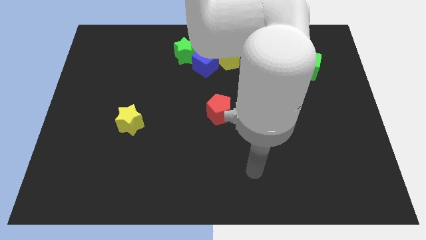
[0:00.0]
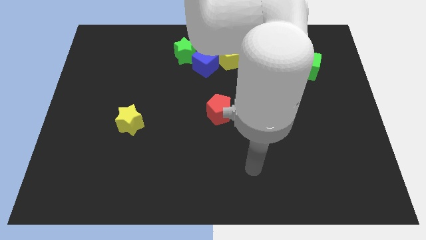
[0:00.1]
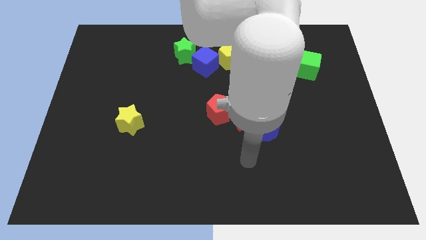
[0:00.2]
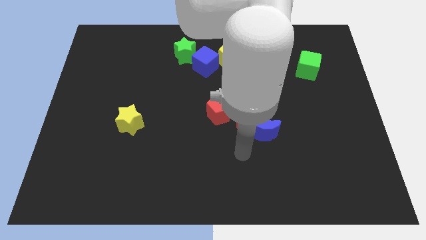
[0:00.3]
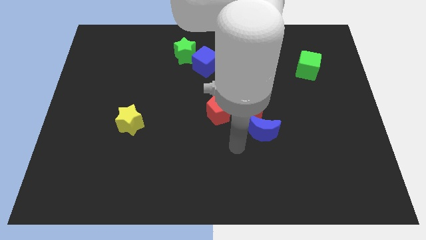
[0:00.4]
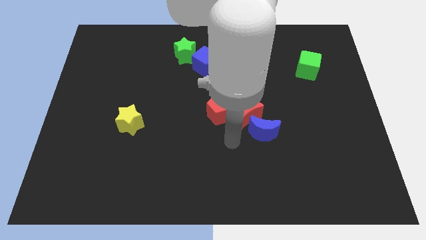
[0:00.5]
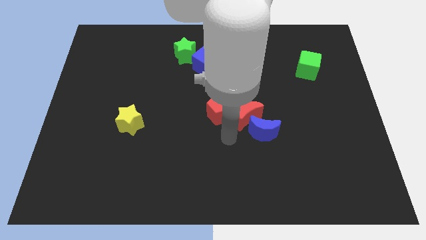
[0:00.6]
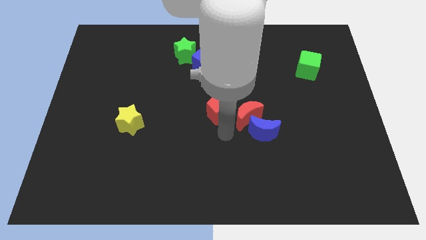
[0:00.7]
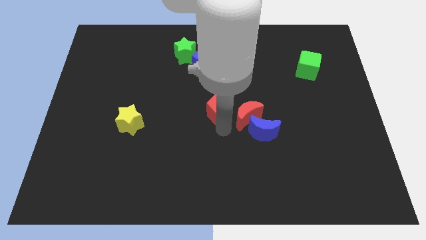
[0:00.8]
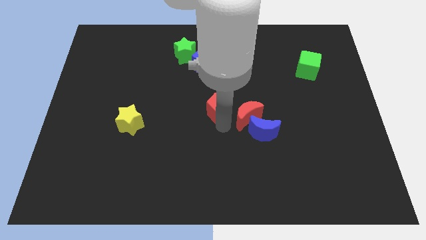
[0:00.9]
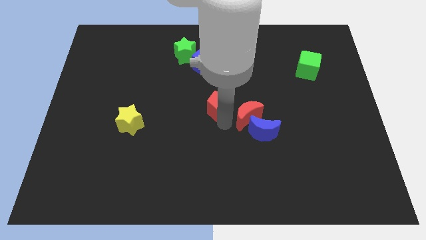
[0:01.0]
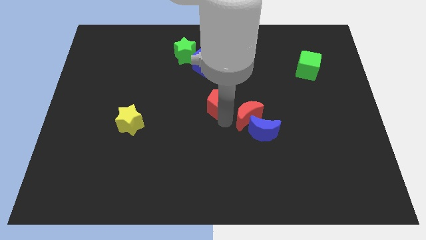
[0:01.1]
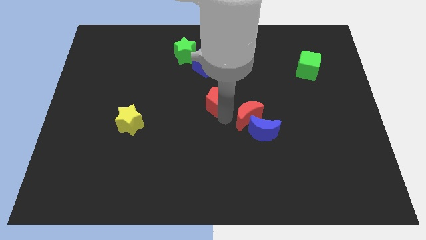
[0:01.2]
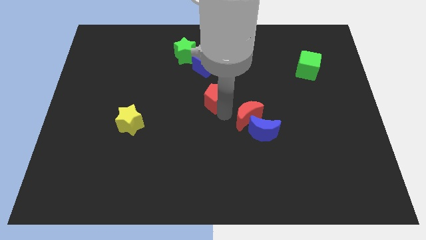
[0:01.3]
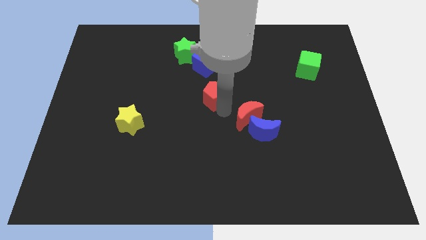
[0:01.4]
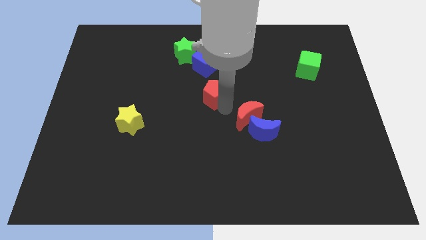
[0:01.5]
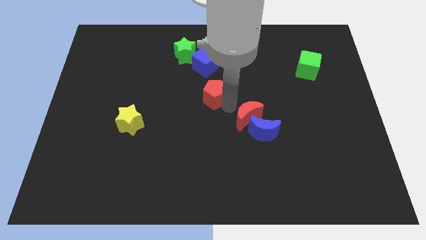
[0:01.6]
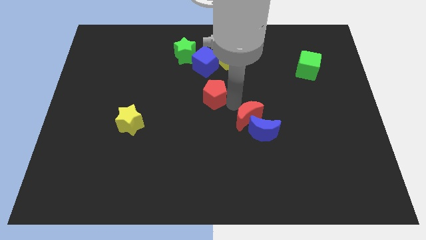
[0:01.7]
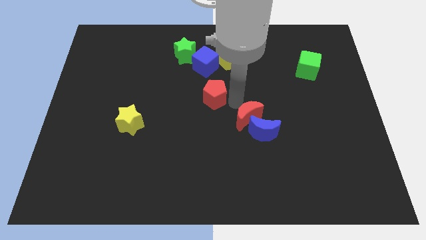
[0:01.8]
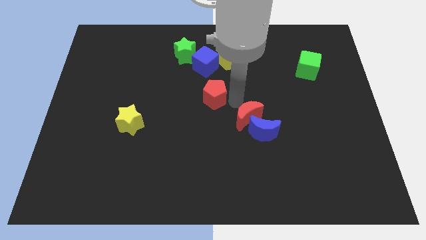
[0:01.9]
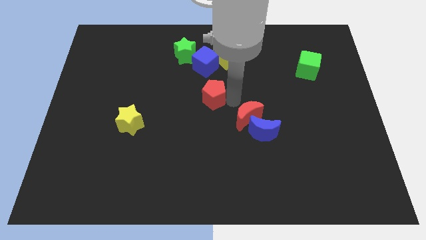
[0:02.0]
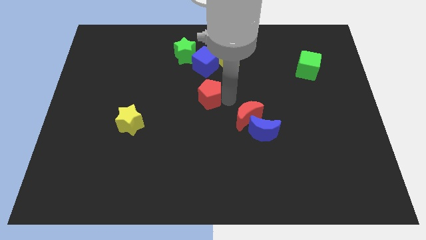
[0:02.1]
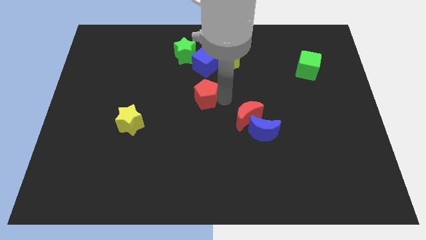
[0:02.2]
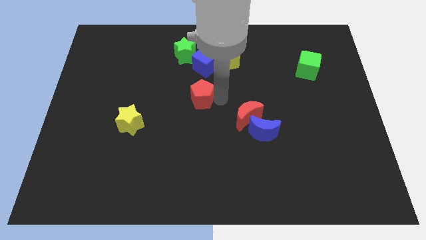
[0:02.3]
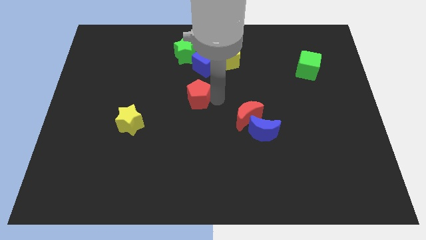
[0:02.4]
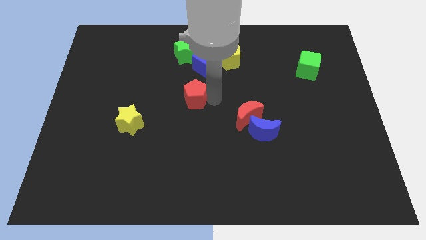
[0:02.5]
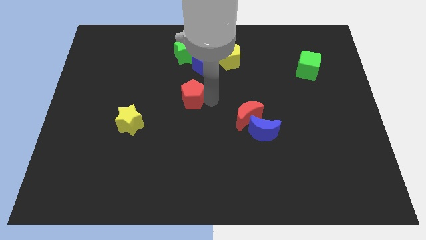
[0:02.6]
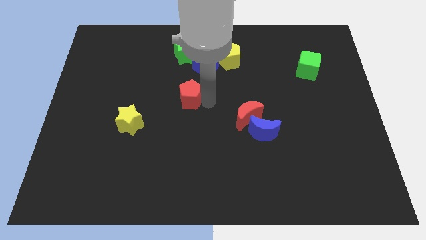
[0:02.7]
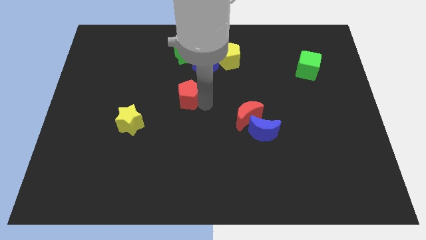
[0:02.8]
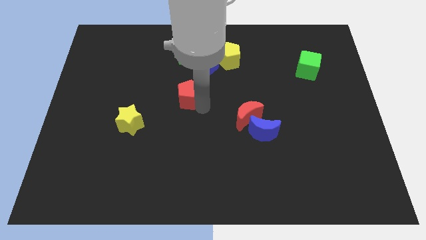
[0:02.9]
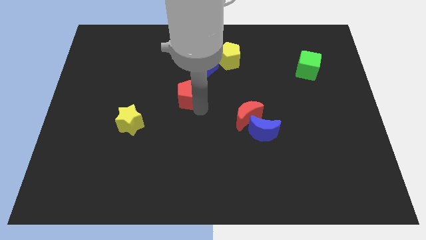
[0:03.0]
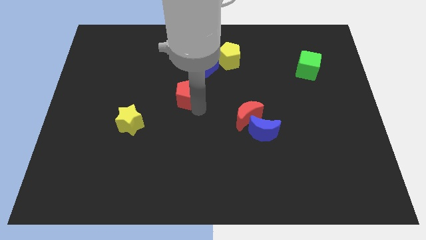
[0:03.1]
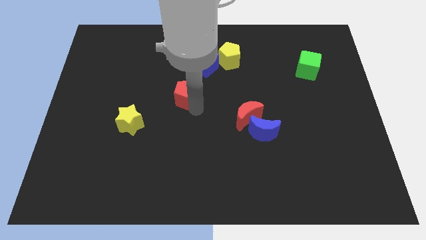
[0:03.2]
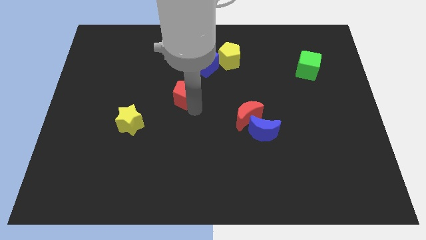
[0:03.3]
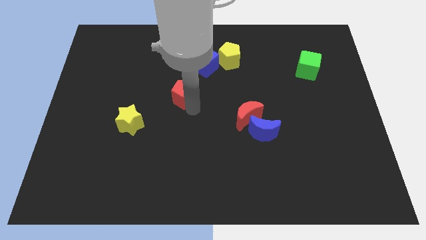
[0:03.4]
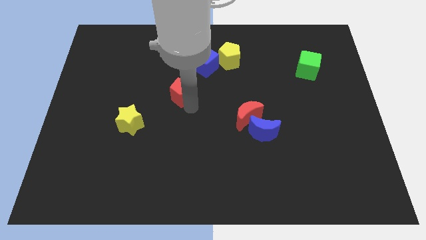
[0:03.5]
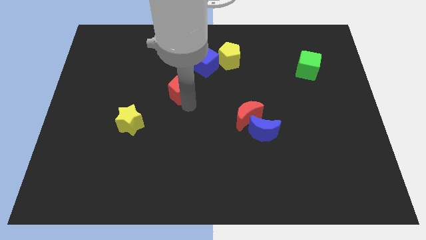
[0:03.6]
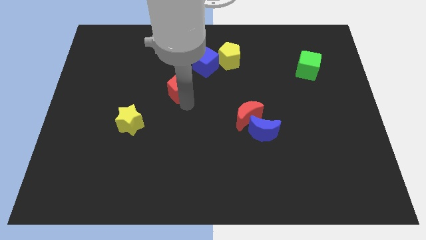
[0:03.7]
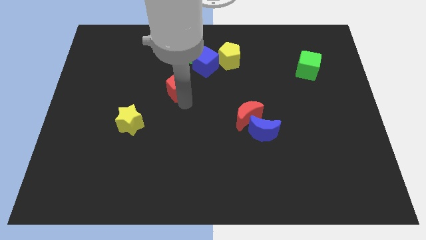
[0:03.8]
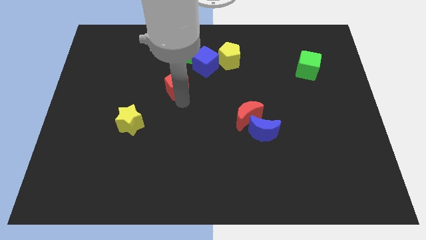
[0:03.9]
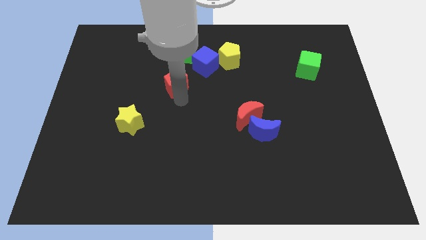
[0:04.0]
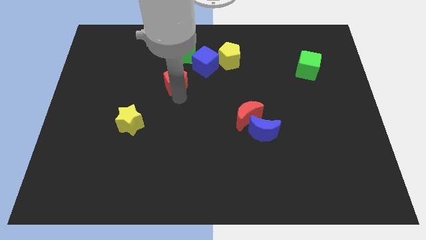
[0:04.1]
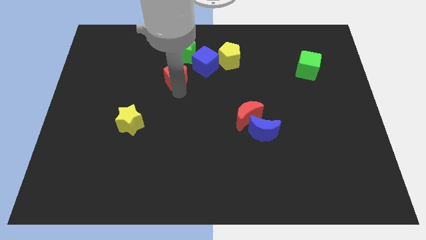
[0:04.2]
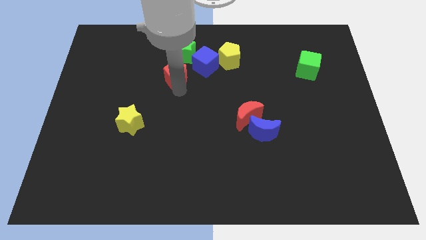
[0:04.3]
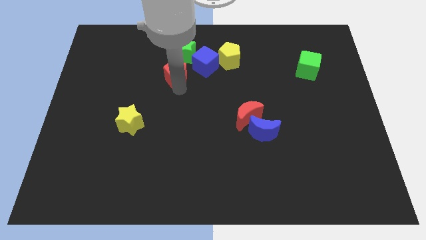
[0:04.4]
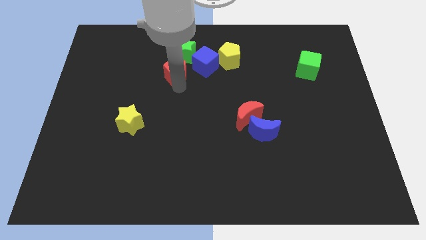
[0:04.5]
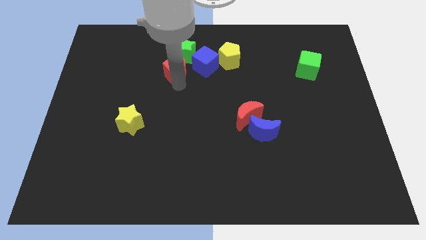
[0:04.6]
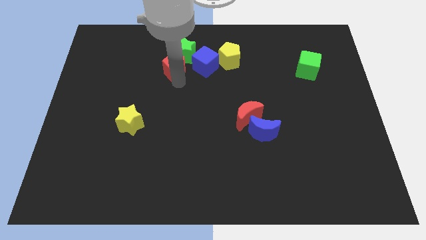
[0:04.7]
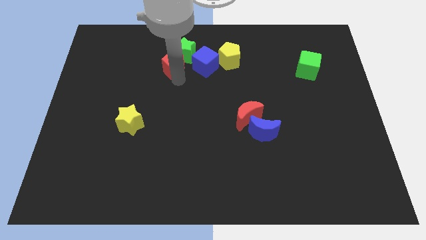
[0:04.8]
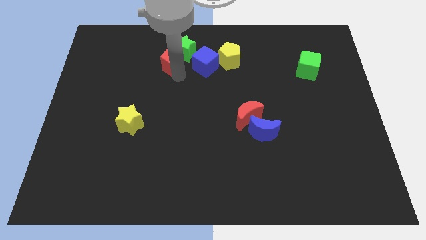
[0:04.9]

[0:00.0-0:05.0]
move the red pentagon next to the green star

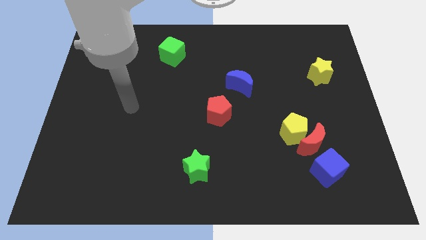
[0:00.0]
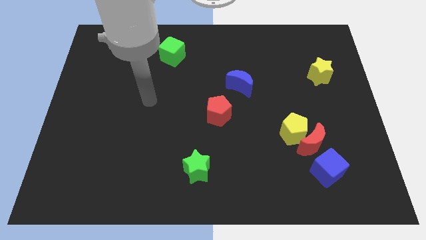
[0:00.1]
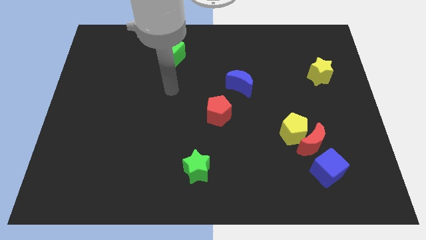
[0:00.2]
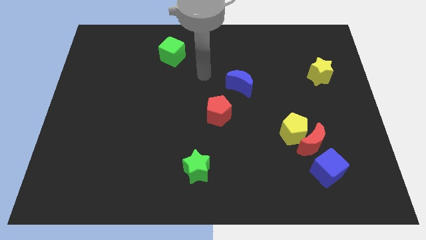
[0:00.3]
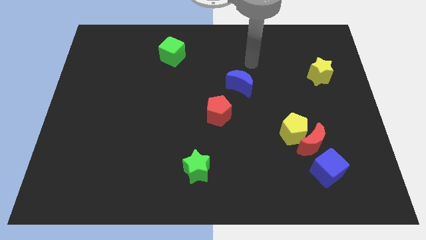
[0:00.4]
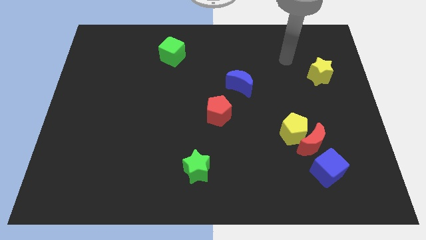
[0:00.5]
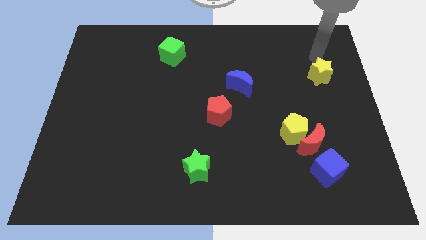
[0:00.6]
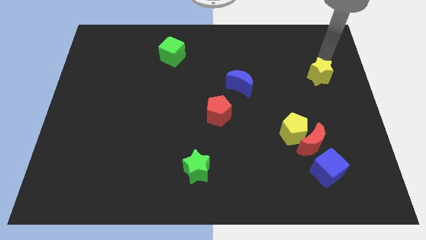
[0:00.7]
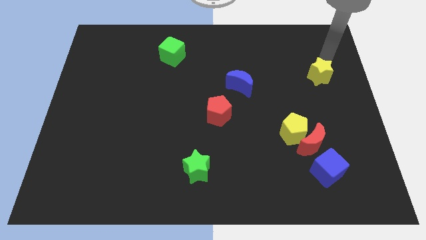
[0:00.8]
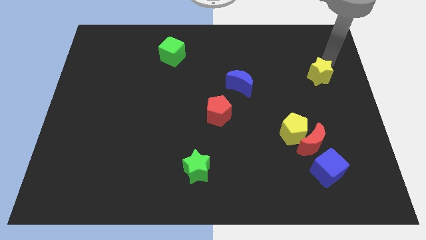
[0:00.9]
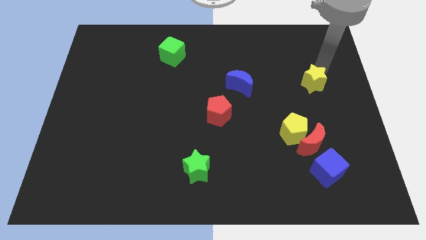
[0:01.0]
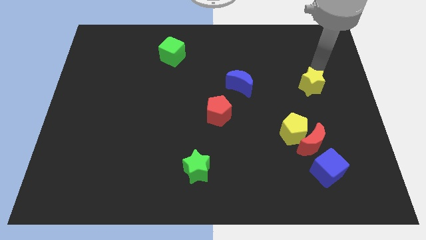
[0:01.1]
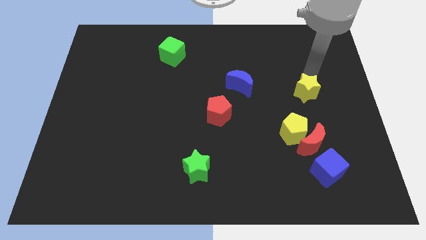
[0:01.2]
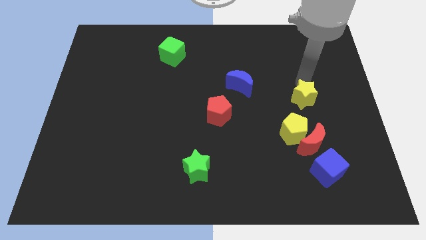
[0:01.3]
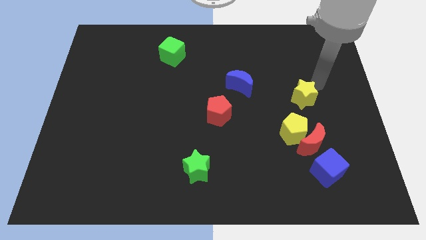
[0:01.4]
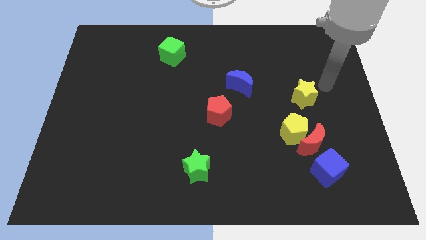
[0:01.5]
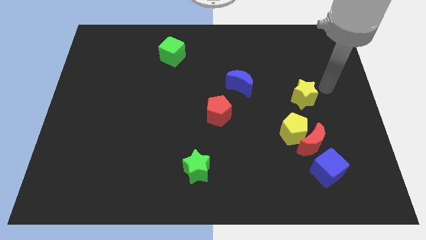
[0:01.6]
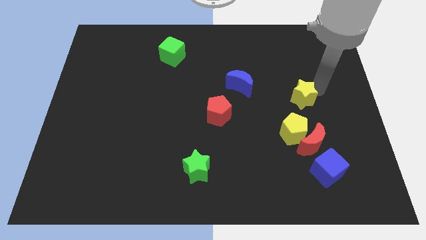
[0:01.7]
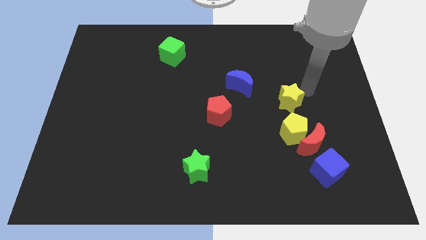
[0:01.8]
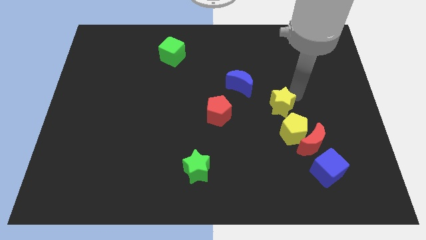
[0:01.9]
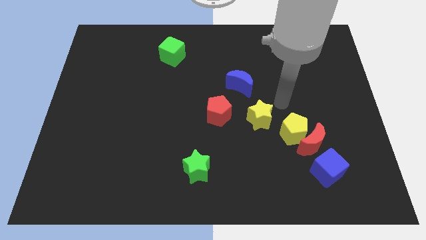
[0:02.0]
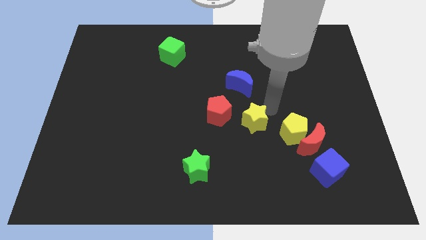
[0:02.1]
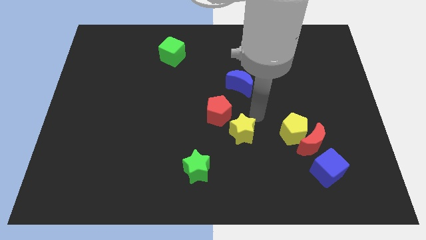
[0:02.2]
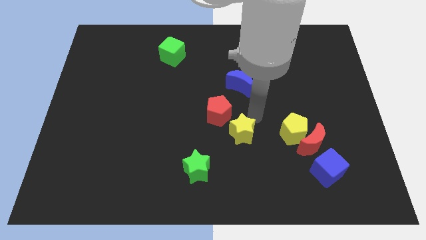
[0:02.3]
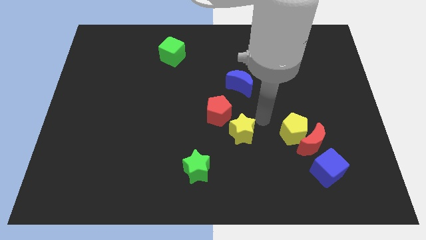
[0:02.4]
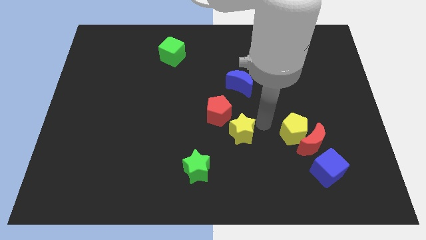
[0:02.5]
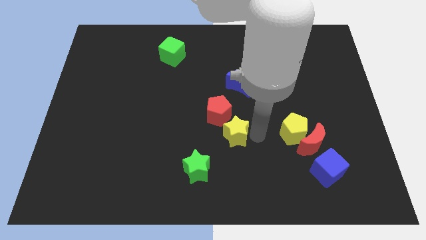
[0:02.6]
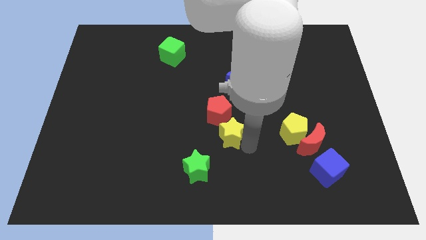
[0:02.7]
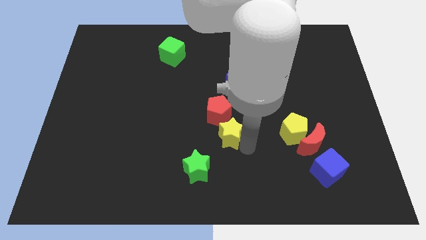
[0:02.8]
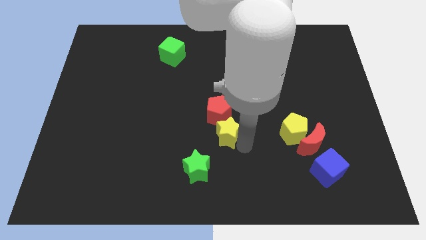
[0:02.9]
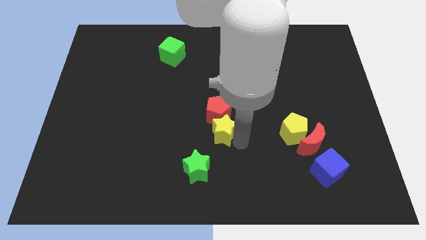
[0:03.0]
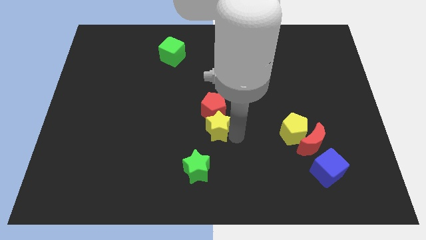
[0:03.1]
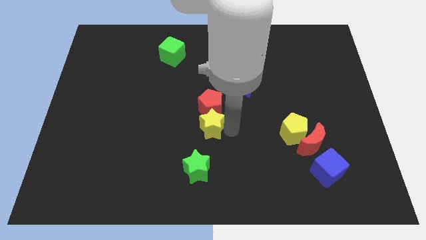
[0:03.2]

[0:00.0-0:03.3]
move the yellow star close to the red pentagon

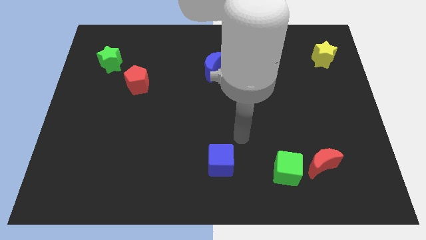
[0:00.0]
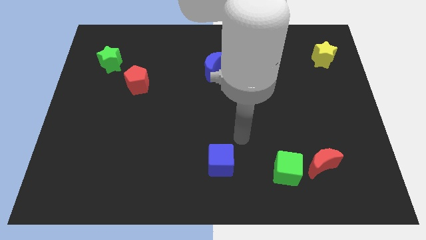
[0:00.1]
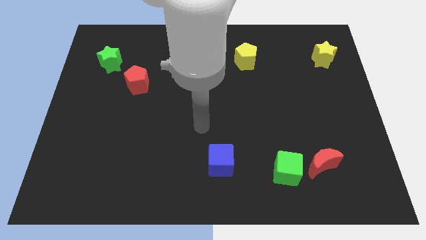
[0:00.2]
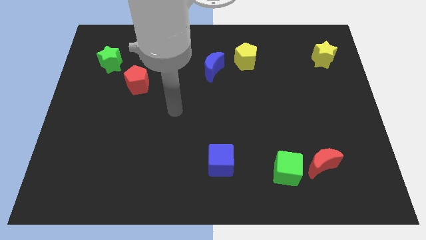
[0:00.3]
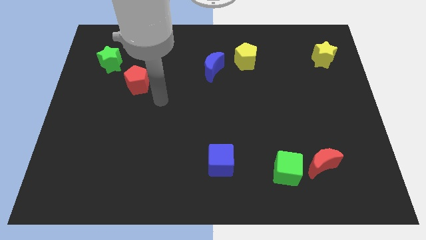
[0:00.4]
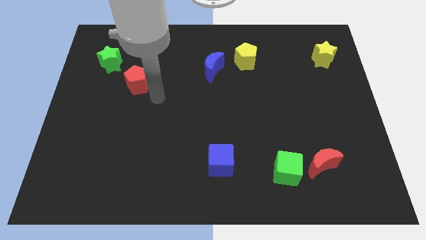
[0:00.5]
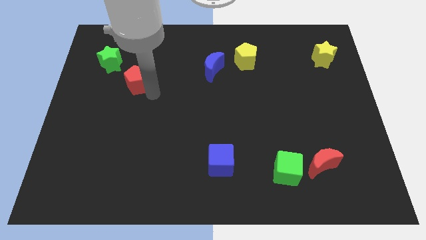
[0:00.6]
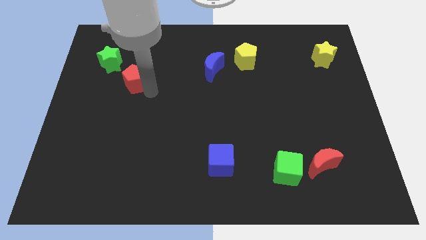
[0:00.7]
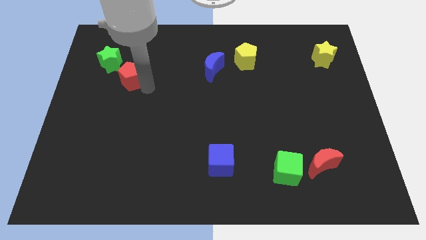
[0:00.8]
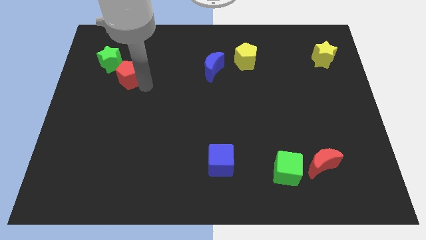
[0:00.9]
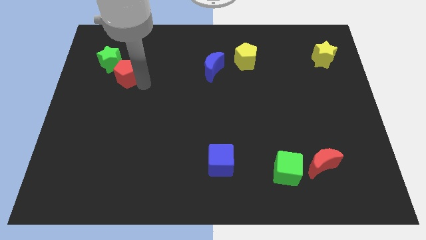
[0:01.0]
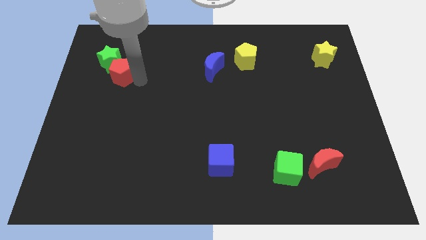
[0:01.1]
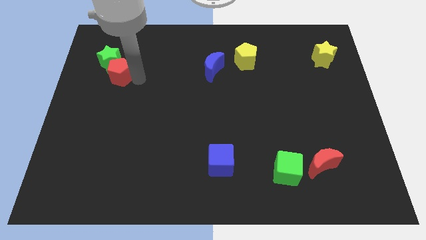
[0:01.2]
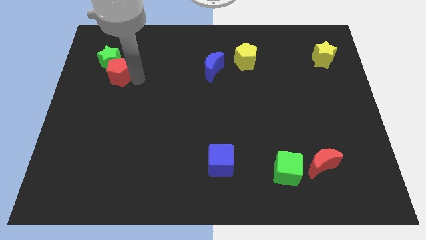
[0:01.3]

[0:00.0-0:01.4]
put the red pentagon next to the green star
